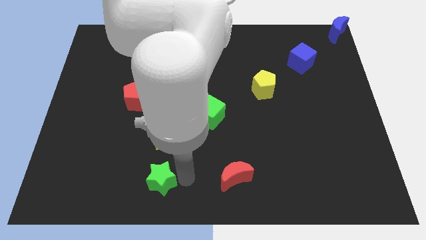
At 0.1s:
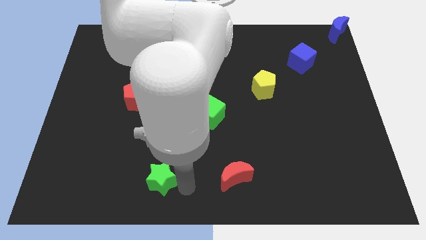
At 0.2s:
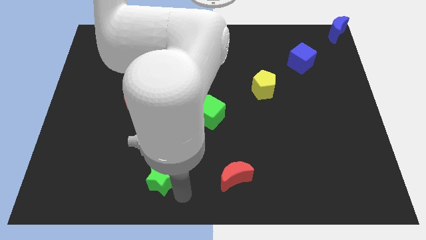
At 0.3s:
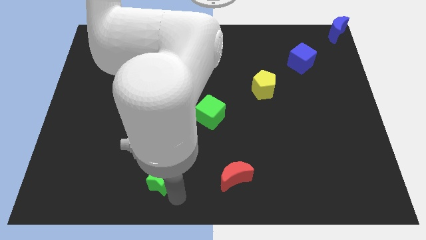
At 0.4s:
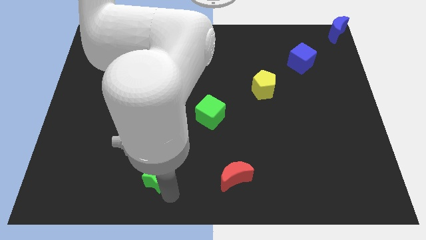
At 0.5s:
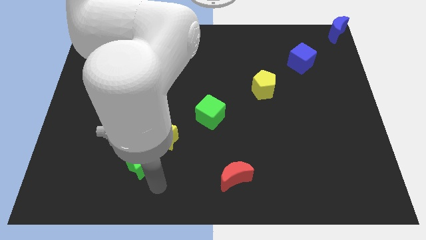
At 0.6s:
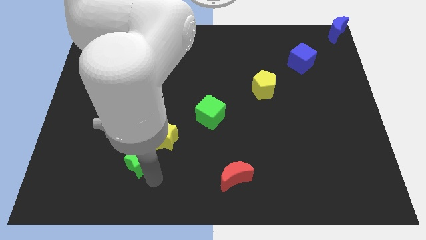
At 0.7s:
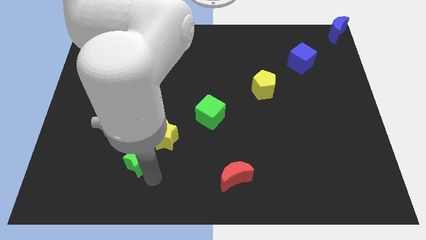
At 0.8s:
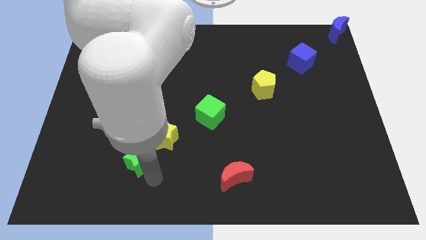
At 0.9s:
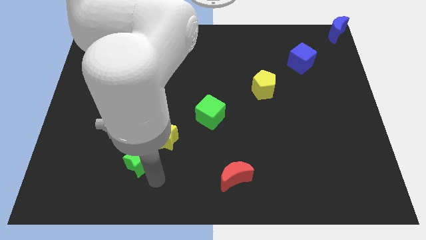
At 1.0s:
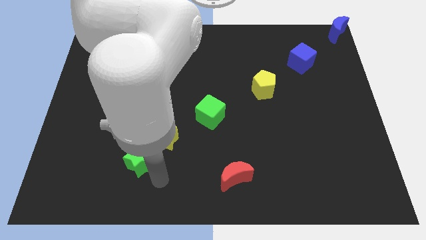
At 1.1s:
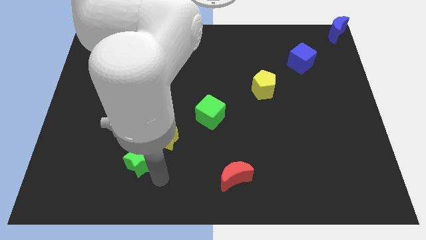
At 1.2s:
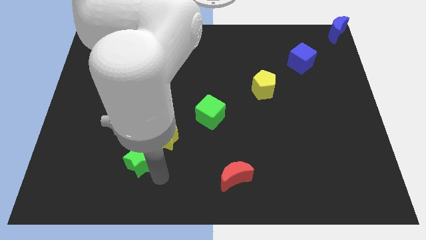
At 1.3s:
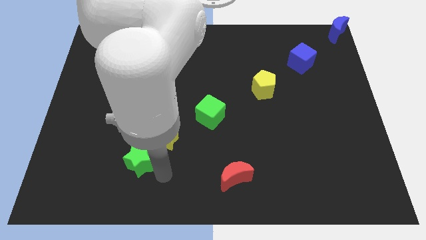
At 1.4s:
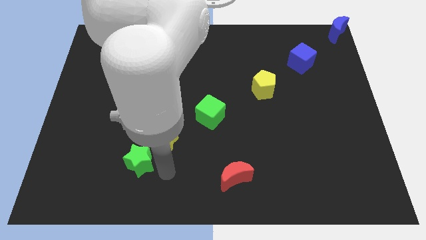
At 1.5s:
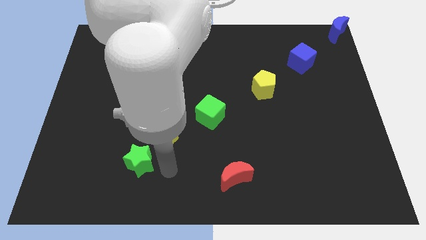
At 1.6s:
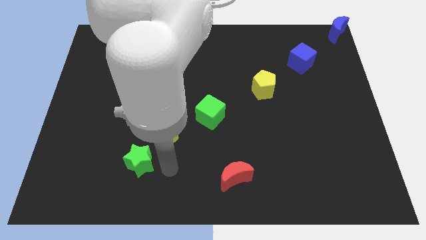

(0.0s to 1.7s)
place the green star at the bottom left side of yellow star

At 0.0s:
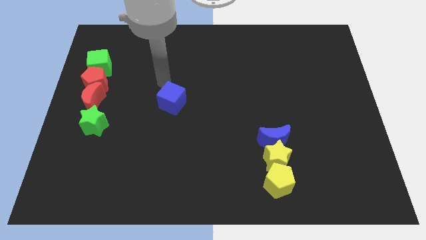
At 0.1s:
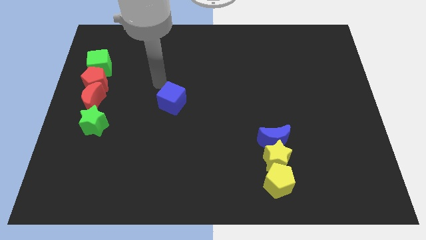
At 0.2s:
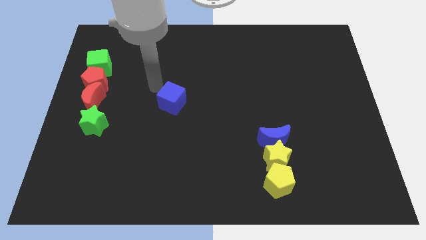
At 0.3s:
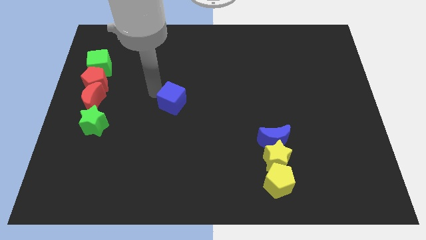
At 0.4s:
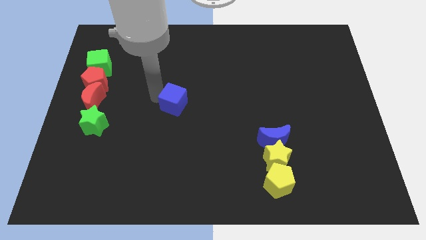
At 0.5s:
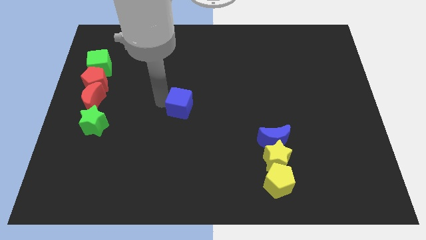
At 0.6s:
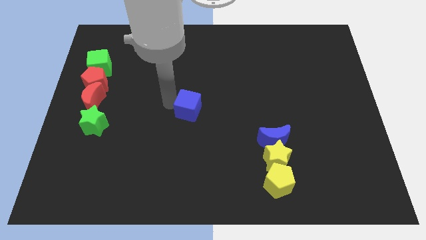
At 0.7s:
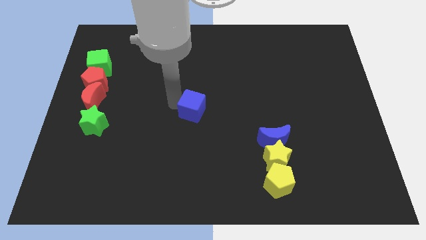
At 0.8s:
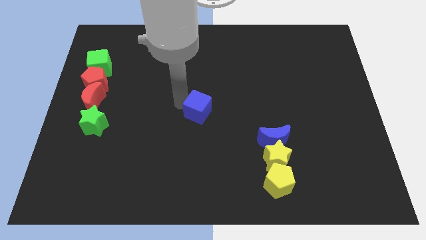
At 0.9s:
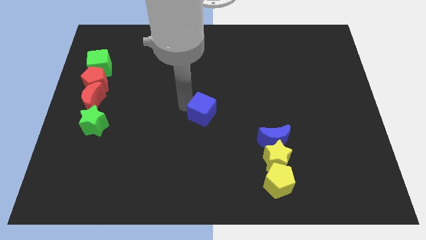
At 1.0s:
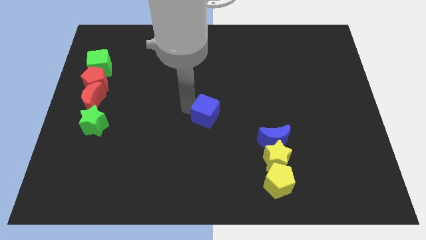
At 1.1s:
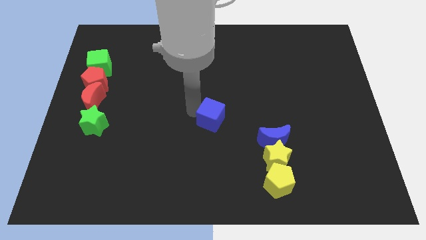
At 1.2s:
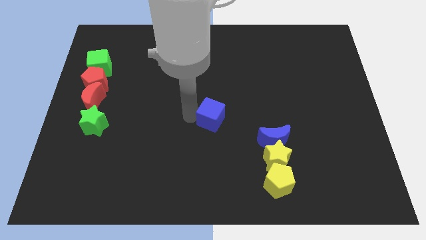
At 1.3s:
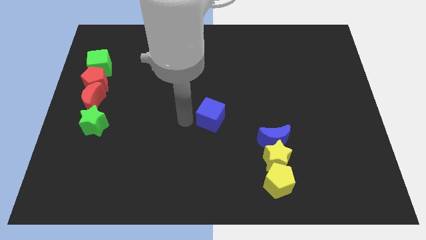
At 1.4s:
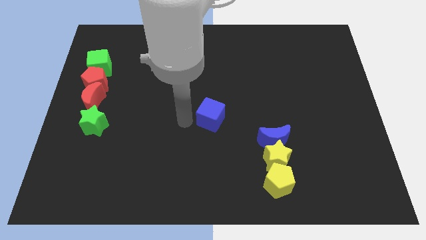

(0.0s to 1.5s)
place the blue cube at the center of the board

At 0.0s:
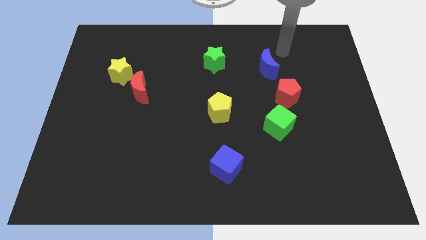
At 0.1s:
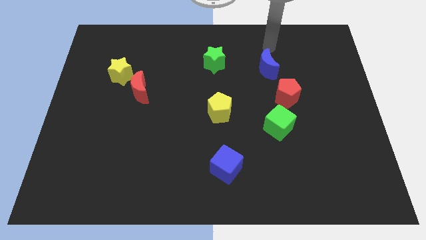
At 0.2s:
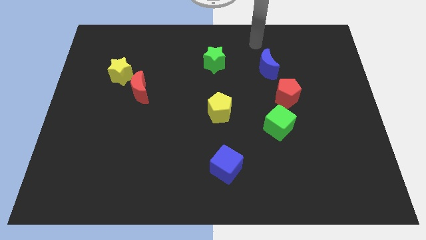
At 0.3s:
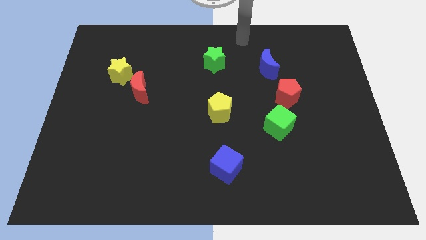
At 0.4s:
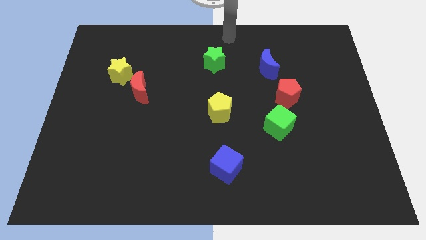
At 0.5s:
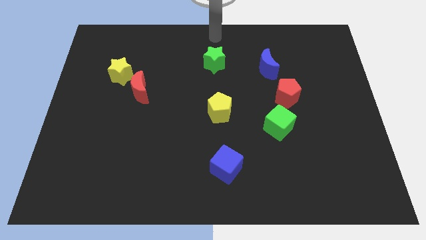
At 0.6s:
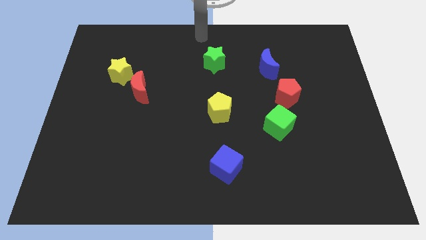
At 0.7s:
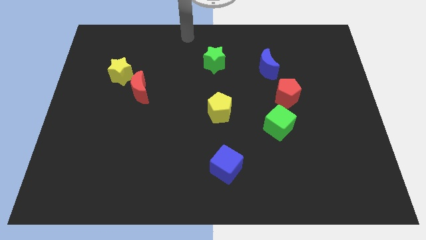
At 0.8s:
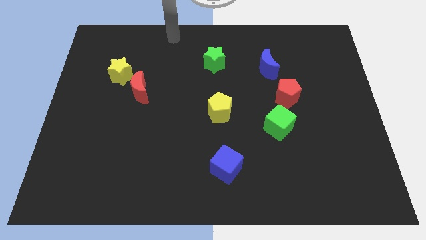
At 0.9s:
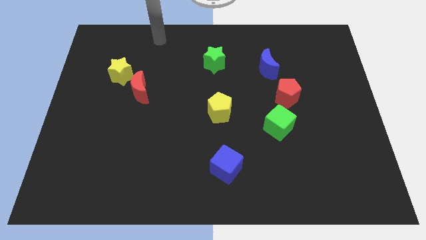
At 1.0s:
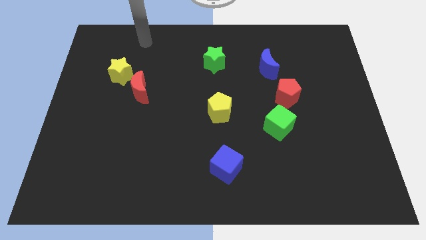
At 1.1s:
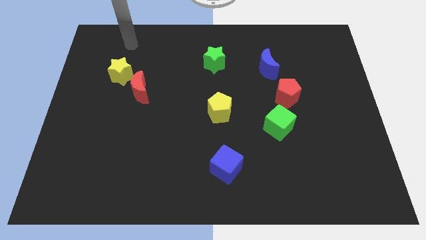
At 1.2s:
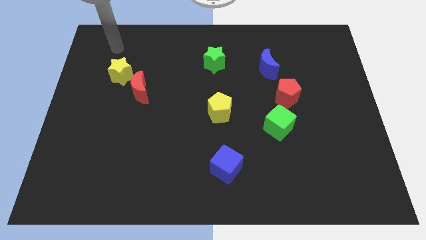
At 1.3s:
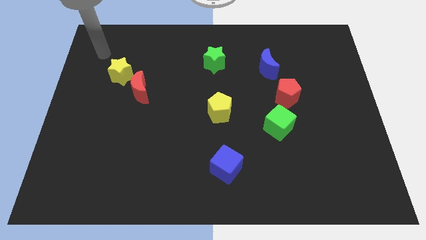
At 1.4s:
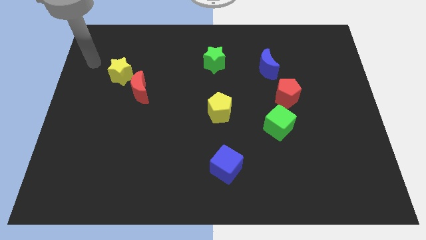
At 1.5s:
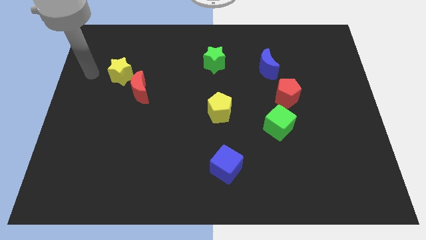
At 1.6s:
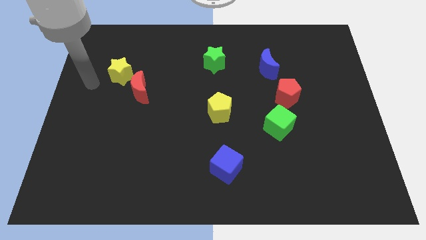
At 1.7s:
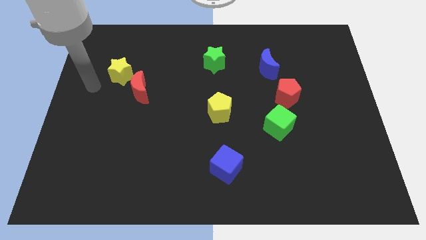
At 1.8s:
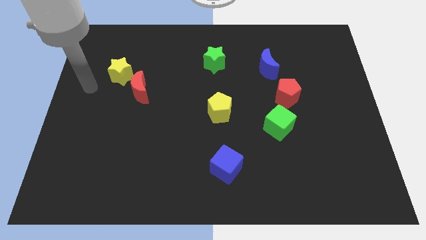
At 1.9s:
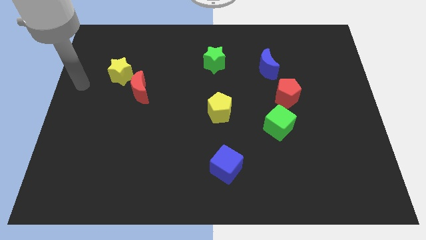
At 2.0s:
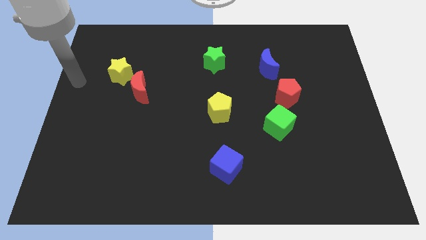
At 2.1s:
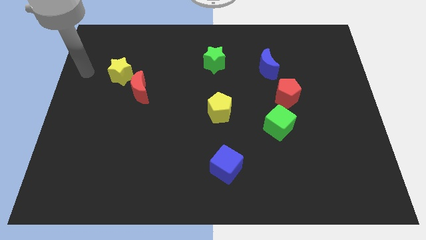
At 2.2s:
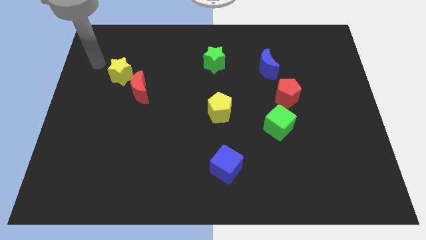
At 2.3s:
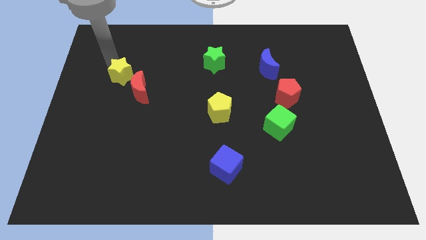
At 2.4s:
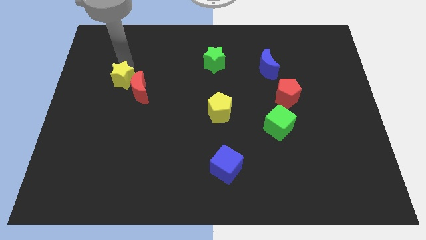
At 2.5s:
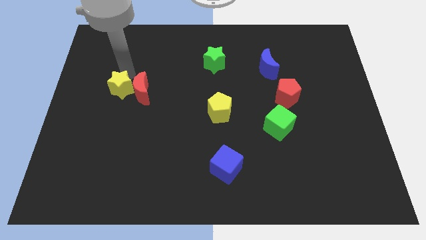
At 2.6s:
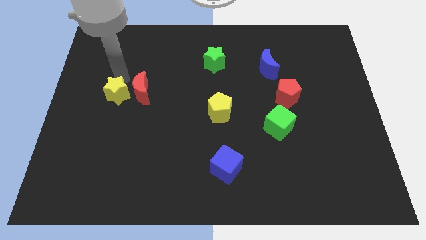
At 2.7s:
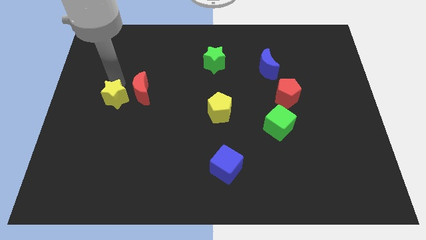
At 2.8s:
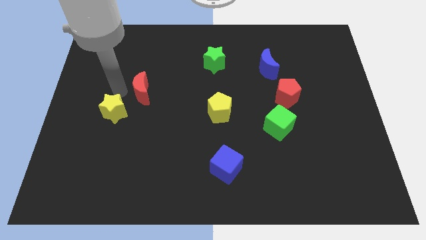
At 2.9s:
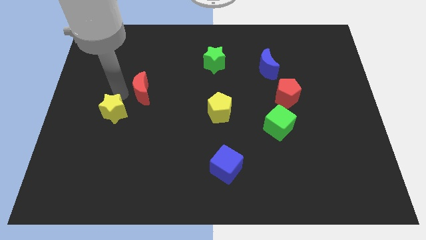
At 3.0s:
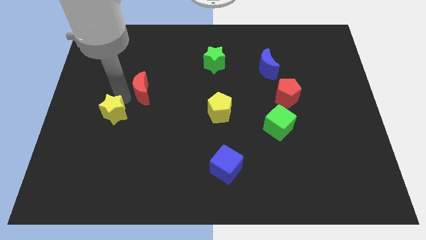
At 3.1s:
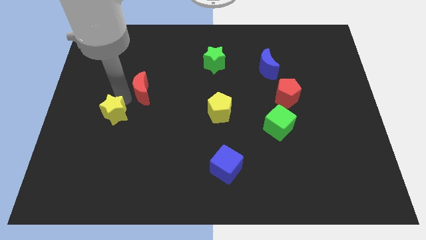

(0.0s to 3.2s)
slide the yellow star to the bottom side of the board

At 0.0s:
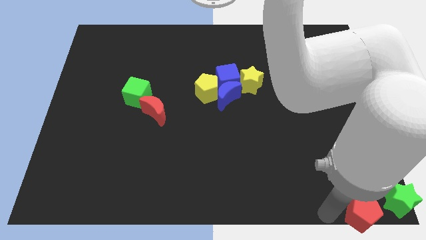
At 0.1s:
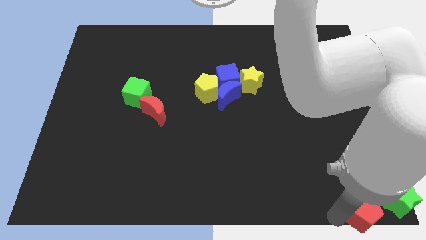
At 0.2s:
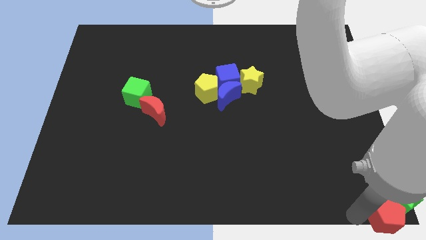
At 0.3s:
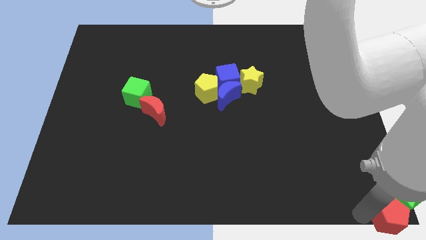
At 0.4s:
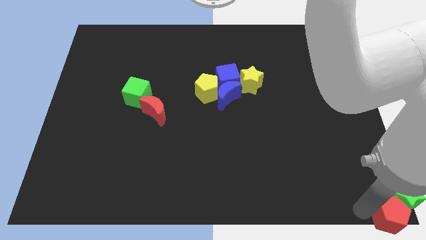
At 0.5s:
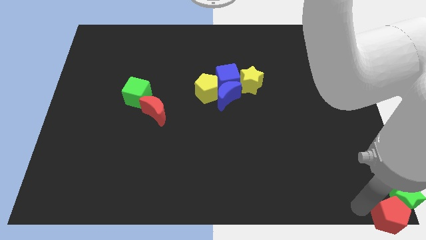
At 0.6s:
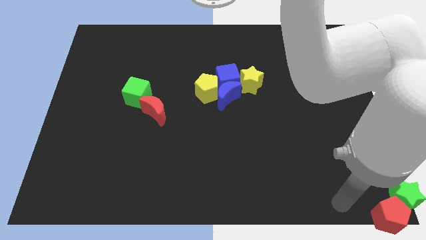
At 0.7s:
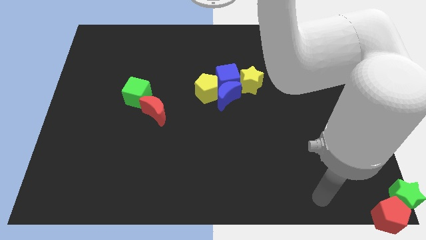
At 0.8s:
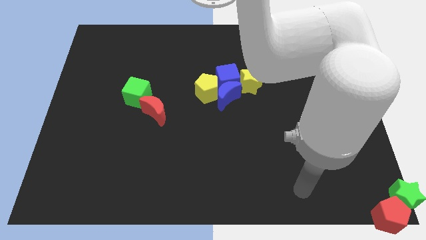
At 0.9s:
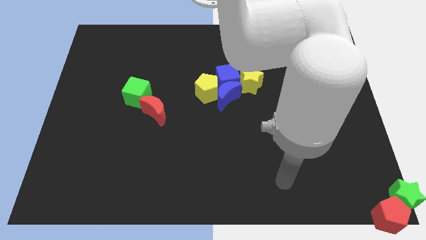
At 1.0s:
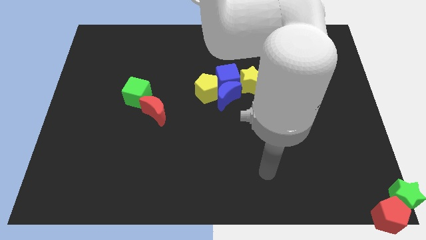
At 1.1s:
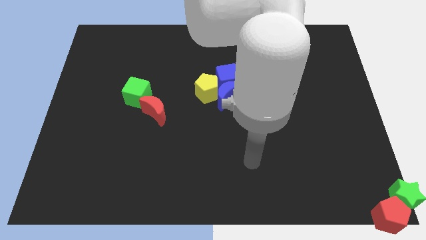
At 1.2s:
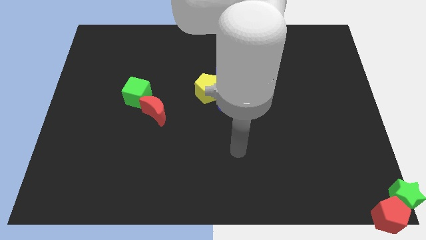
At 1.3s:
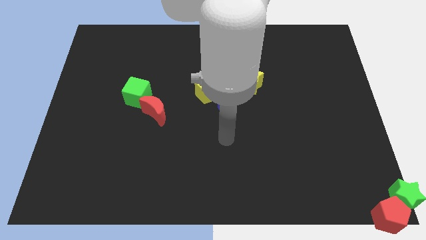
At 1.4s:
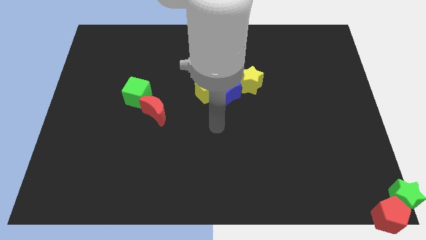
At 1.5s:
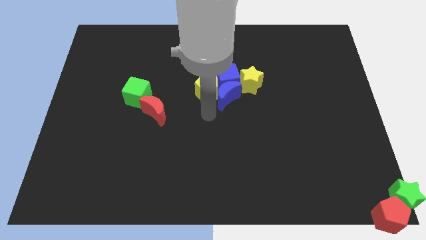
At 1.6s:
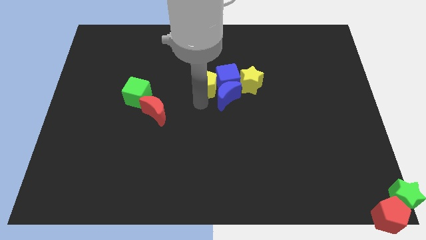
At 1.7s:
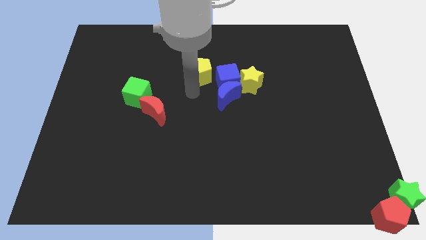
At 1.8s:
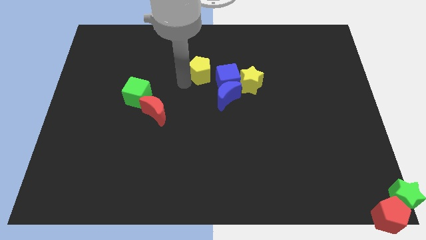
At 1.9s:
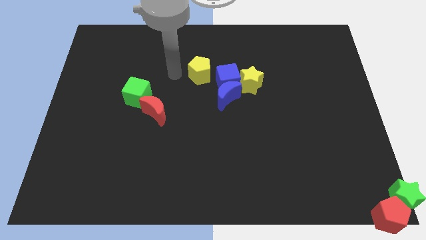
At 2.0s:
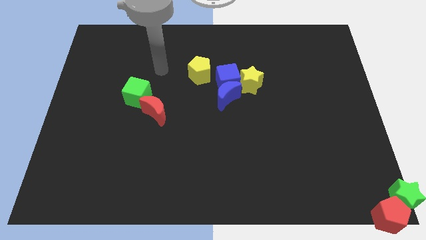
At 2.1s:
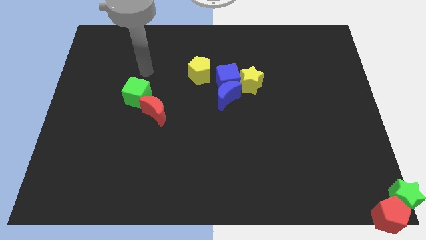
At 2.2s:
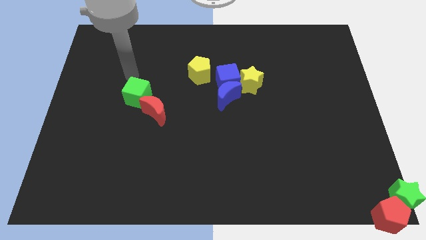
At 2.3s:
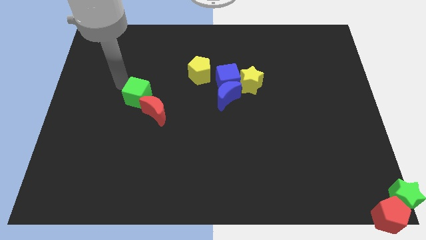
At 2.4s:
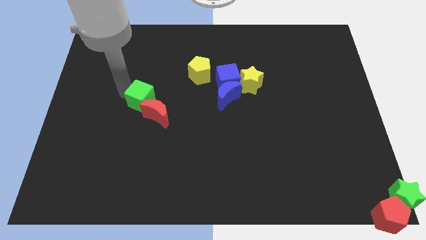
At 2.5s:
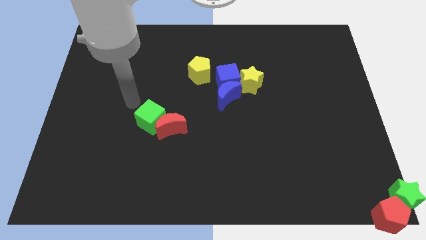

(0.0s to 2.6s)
move your arm away from red pentagon

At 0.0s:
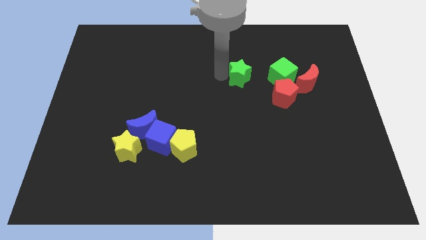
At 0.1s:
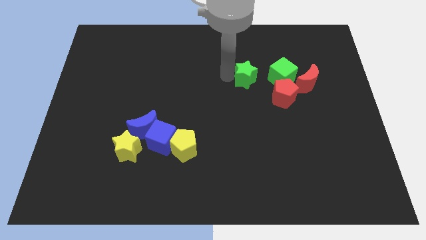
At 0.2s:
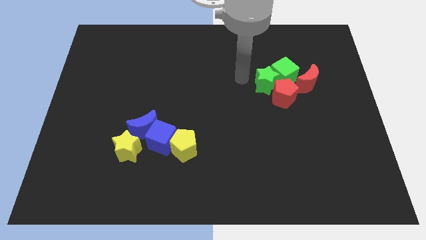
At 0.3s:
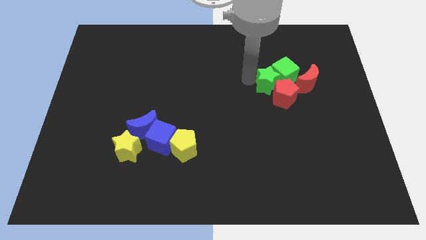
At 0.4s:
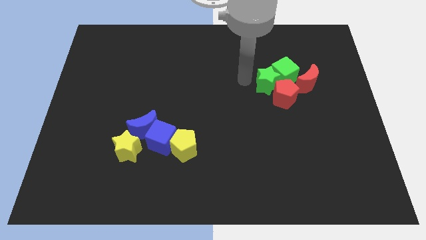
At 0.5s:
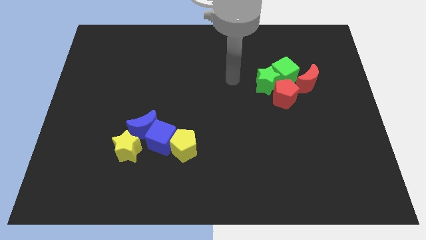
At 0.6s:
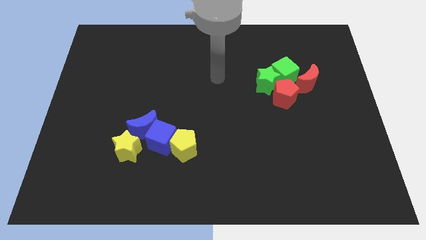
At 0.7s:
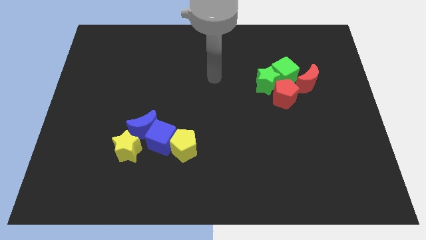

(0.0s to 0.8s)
move your arm away from green star
